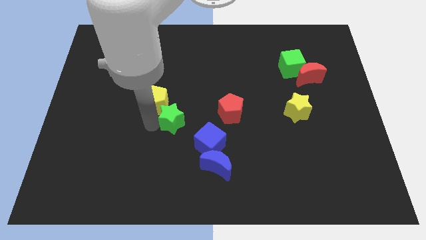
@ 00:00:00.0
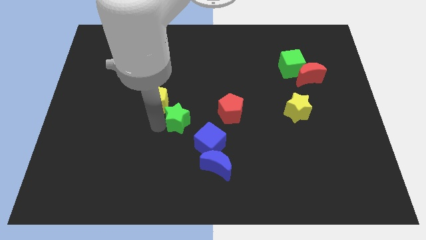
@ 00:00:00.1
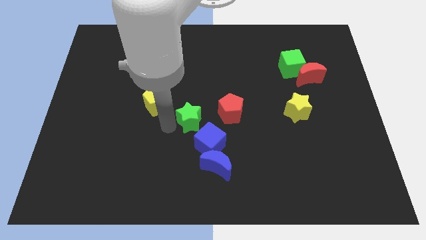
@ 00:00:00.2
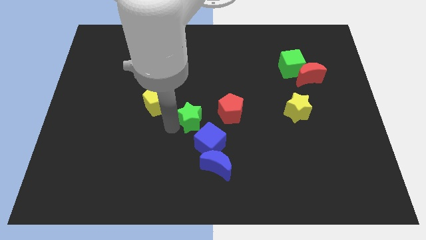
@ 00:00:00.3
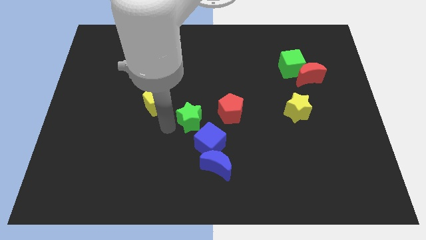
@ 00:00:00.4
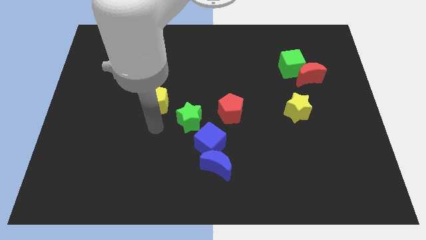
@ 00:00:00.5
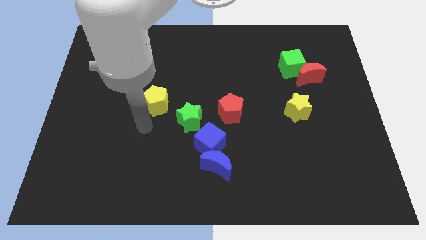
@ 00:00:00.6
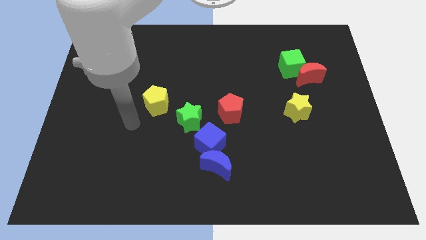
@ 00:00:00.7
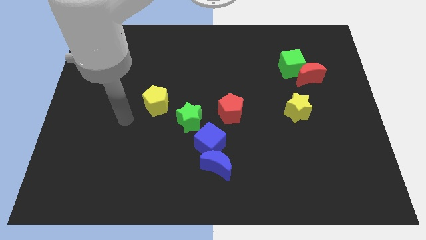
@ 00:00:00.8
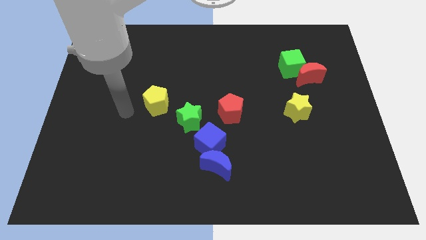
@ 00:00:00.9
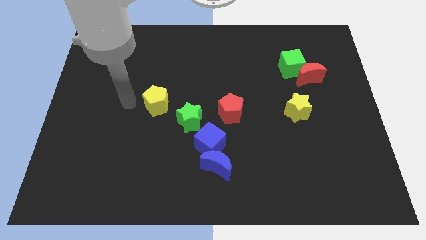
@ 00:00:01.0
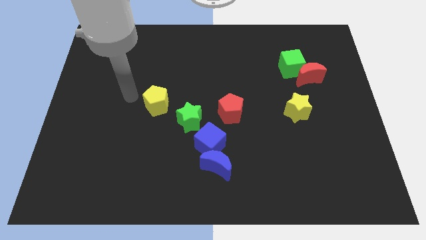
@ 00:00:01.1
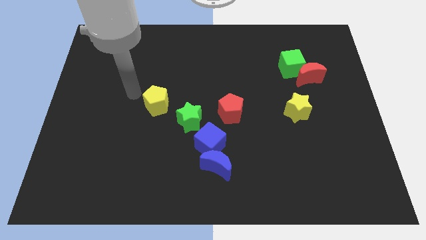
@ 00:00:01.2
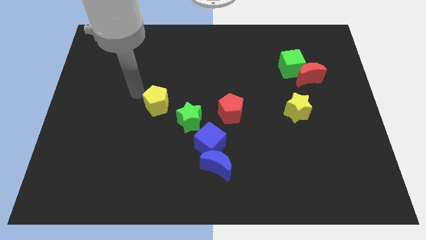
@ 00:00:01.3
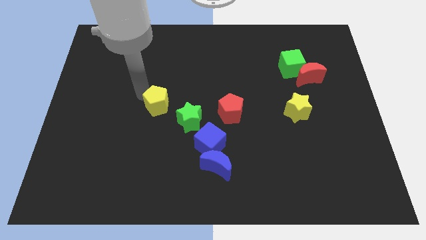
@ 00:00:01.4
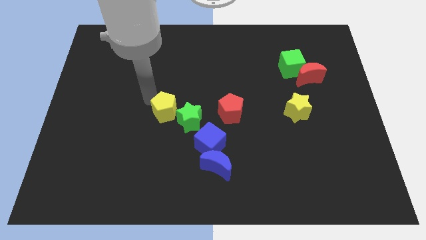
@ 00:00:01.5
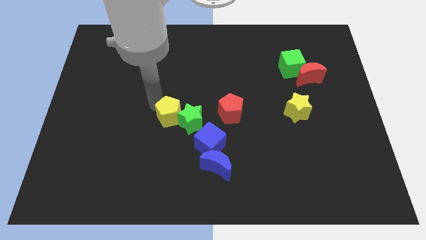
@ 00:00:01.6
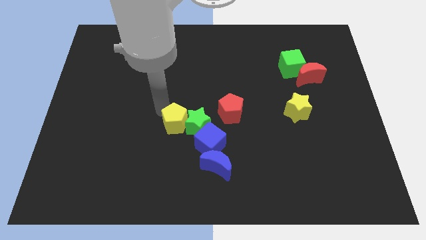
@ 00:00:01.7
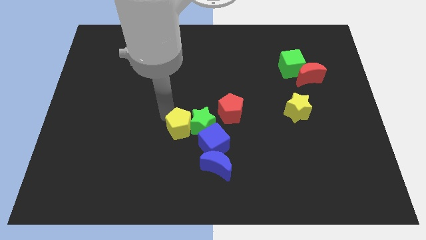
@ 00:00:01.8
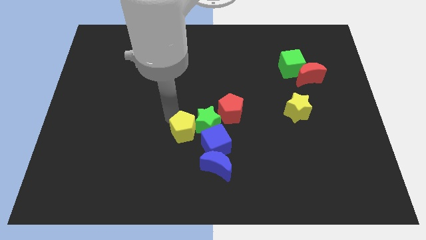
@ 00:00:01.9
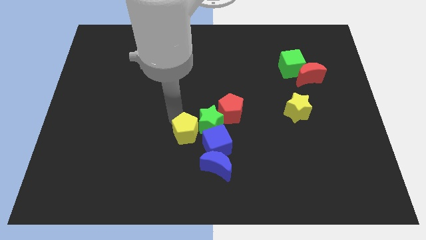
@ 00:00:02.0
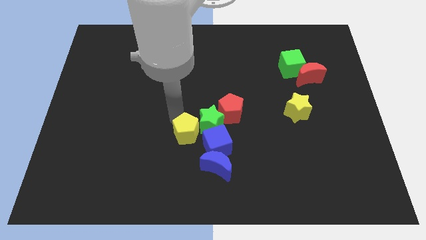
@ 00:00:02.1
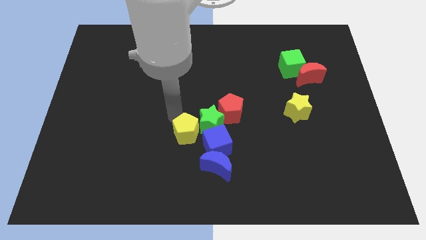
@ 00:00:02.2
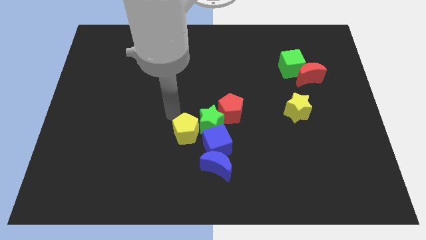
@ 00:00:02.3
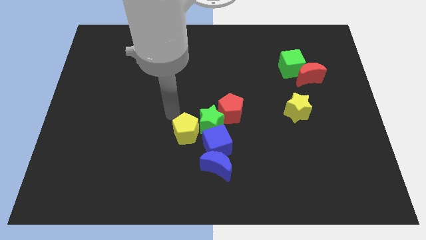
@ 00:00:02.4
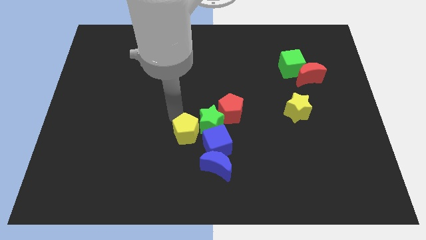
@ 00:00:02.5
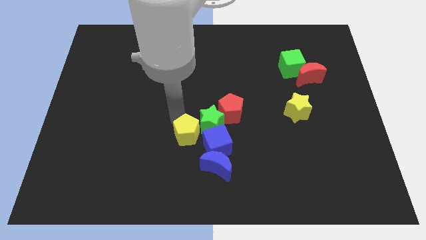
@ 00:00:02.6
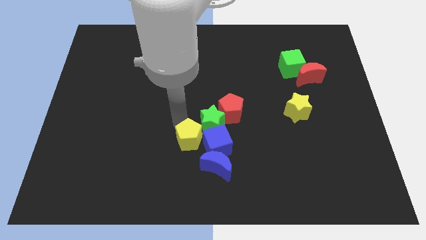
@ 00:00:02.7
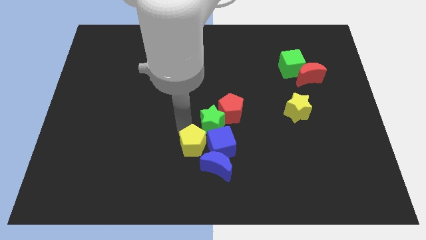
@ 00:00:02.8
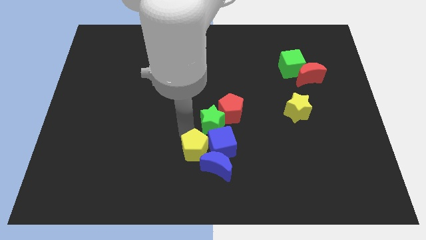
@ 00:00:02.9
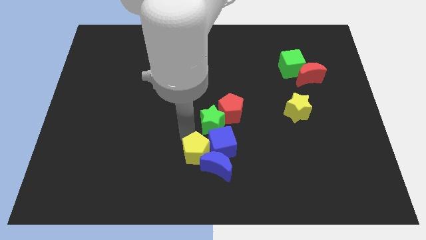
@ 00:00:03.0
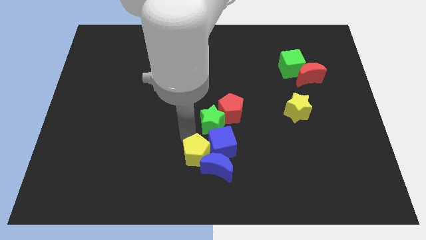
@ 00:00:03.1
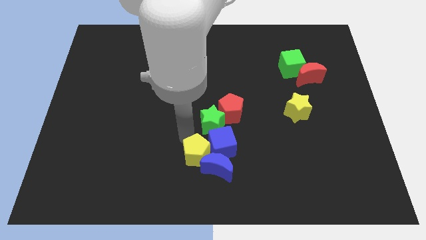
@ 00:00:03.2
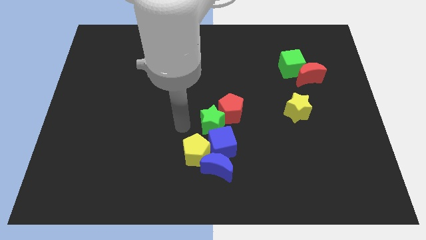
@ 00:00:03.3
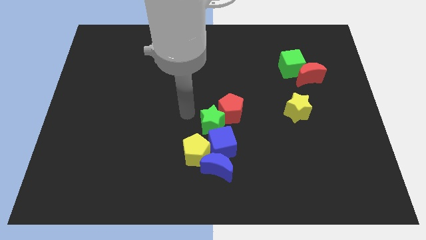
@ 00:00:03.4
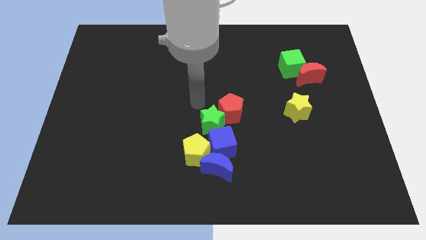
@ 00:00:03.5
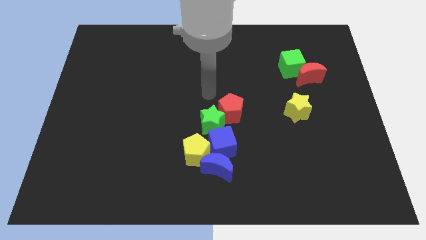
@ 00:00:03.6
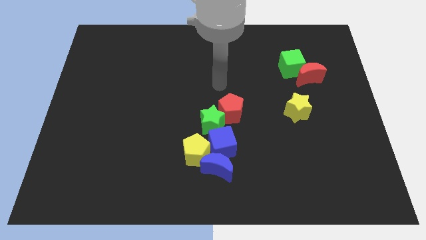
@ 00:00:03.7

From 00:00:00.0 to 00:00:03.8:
push the yellow pentagon into the blue moon

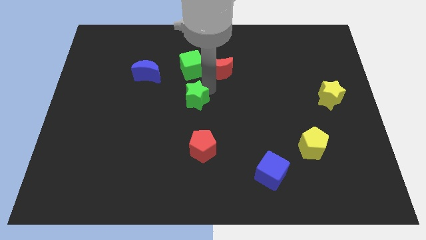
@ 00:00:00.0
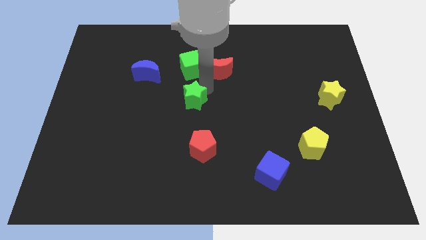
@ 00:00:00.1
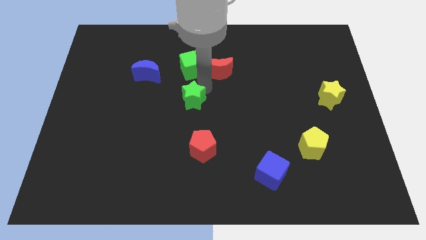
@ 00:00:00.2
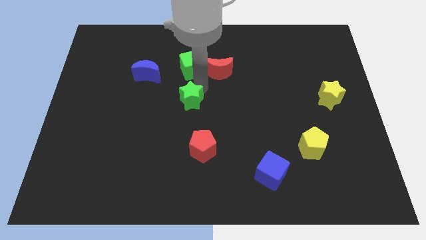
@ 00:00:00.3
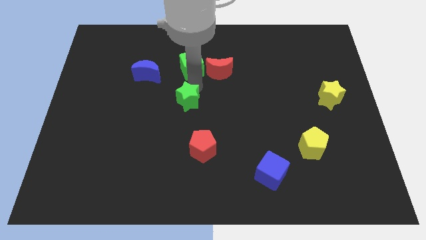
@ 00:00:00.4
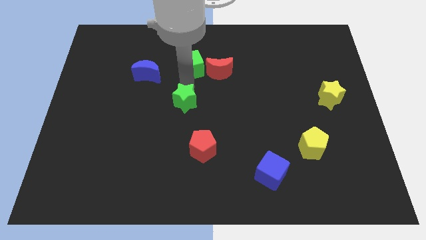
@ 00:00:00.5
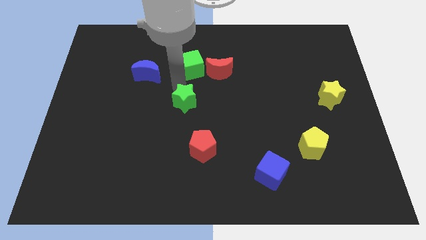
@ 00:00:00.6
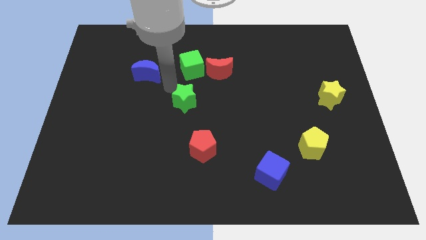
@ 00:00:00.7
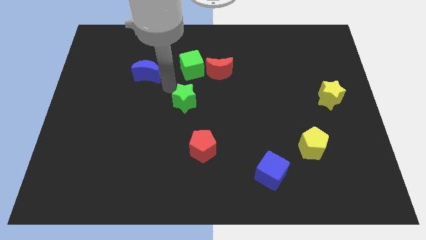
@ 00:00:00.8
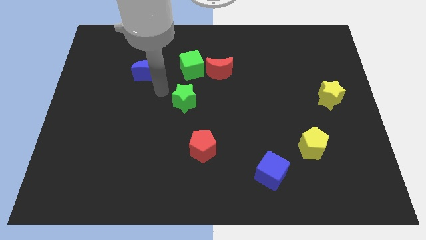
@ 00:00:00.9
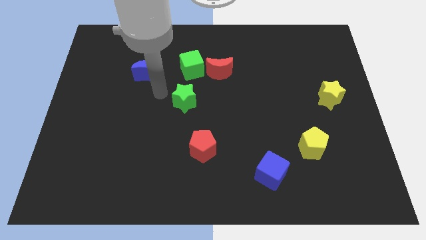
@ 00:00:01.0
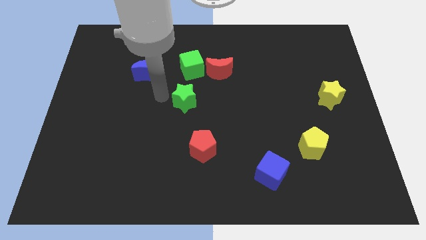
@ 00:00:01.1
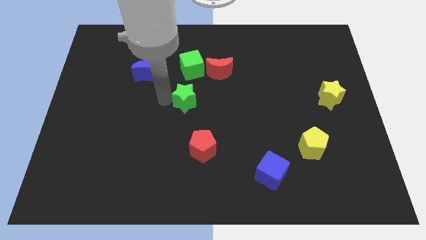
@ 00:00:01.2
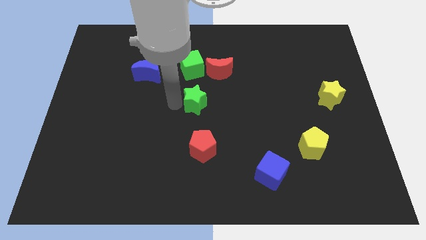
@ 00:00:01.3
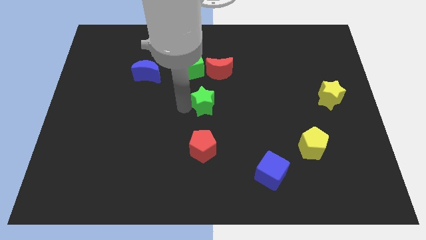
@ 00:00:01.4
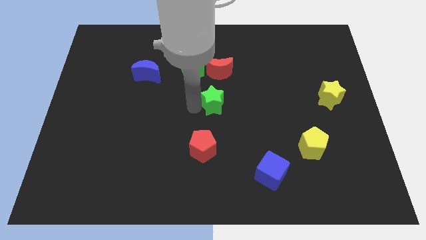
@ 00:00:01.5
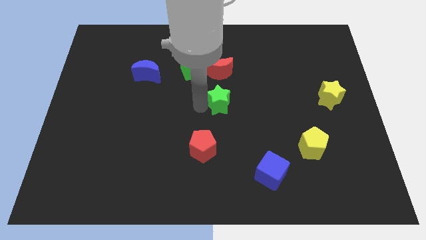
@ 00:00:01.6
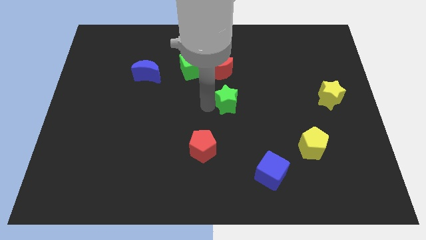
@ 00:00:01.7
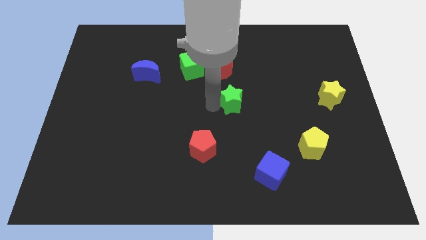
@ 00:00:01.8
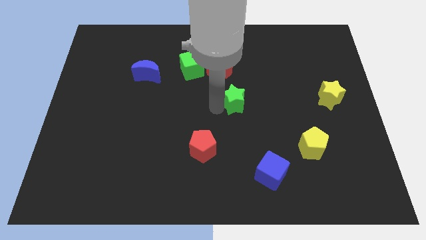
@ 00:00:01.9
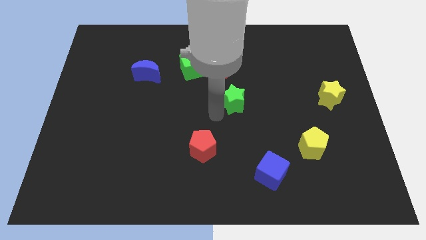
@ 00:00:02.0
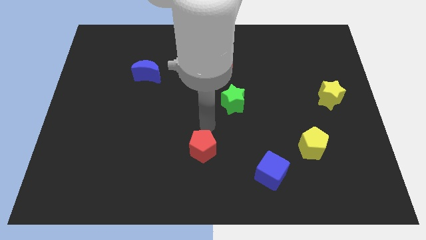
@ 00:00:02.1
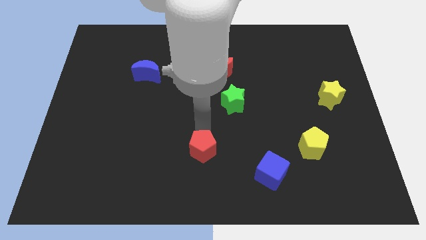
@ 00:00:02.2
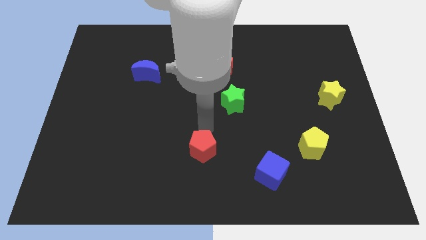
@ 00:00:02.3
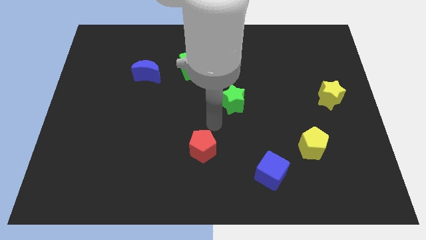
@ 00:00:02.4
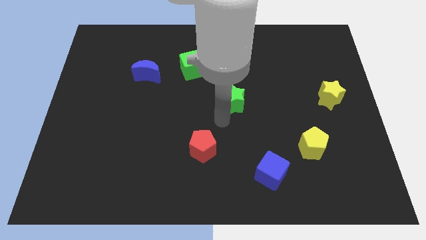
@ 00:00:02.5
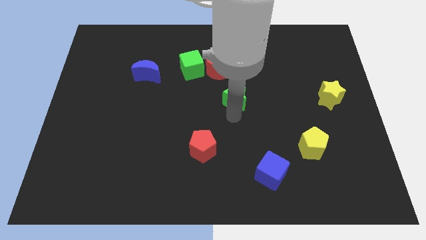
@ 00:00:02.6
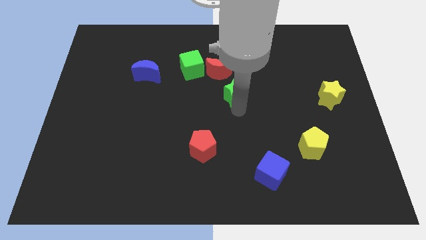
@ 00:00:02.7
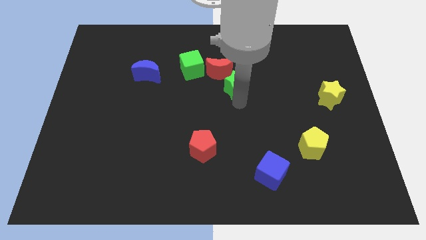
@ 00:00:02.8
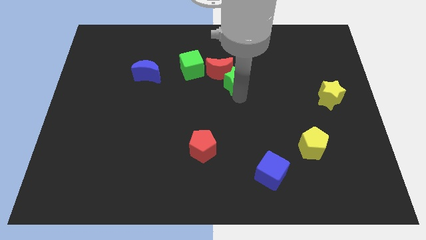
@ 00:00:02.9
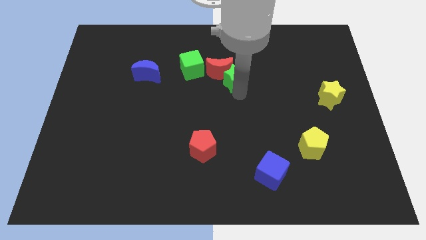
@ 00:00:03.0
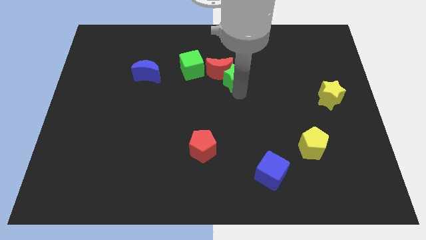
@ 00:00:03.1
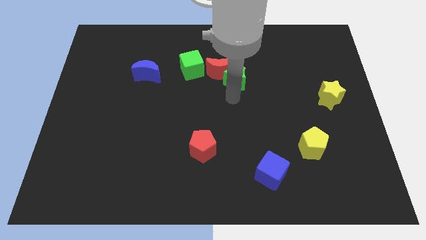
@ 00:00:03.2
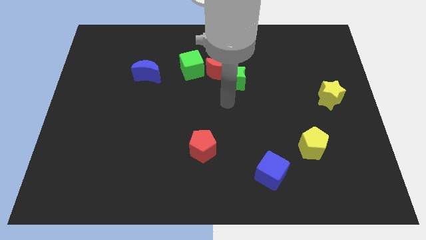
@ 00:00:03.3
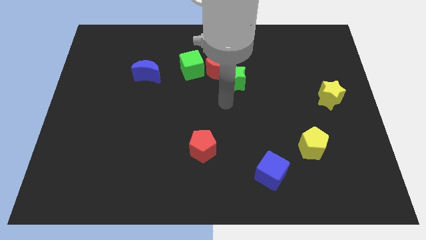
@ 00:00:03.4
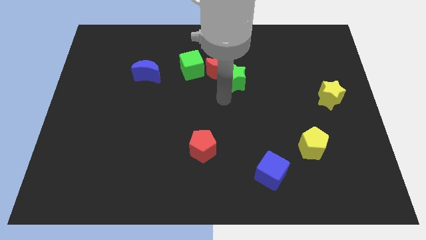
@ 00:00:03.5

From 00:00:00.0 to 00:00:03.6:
slide the green star into the red moon

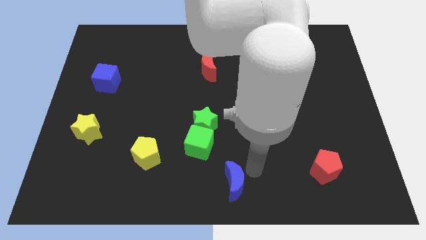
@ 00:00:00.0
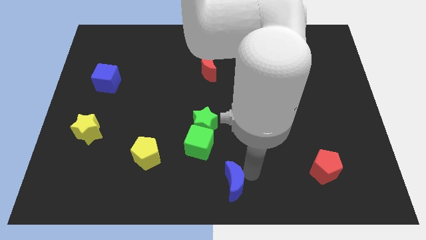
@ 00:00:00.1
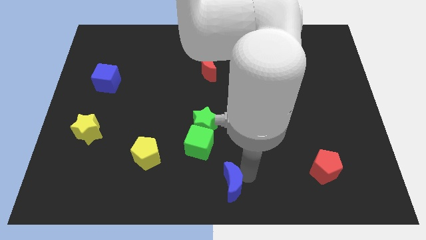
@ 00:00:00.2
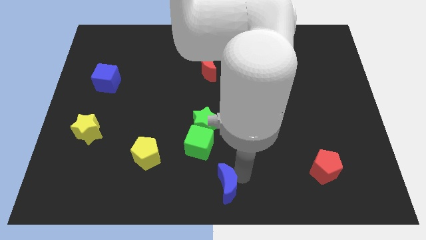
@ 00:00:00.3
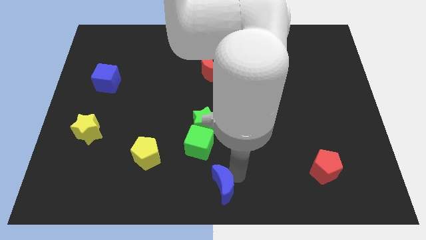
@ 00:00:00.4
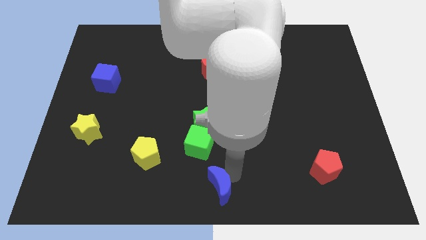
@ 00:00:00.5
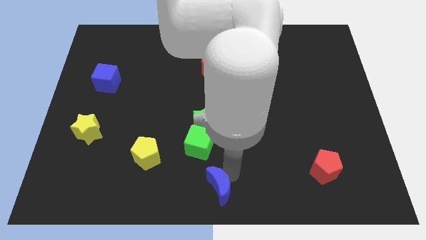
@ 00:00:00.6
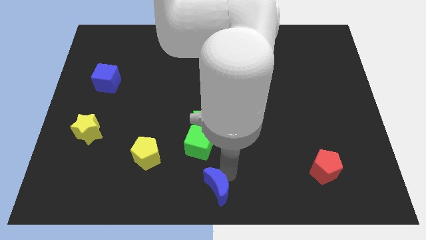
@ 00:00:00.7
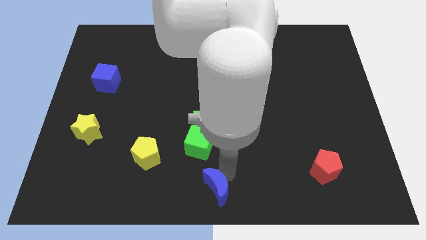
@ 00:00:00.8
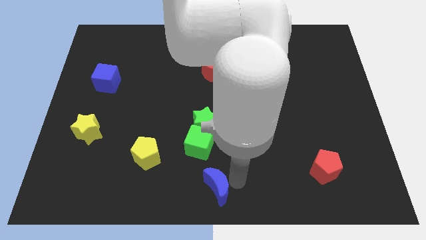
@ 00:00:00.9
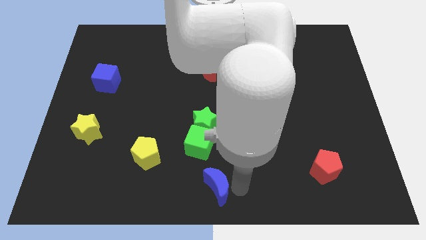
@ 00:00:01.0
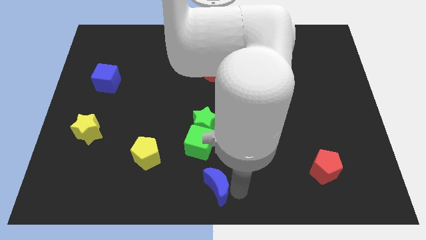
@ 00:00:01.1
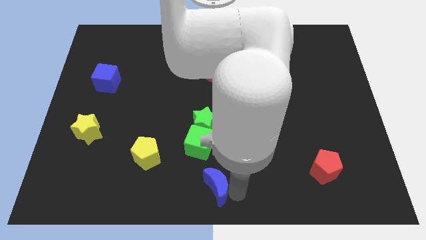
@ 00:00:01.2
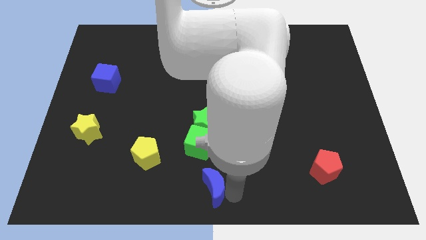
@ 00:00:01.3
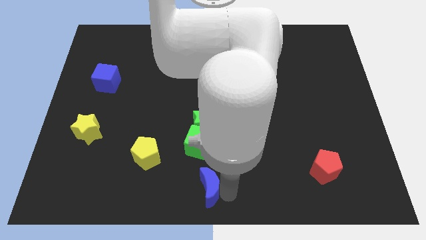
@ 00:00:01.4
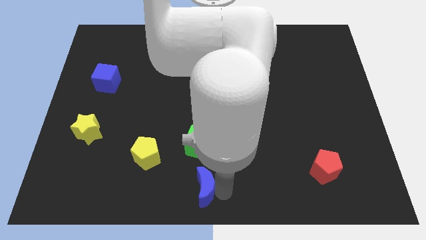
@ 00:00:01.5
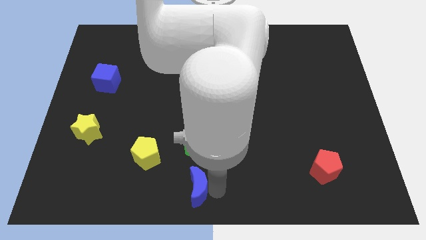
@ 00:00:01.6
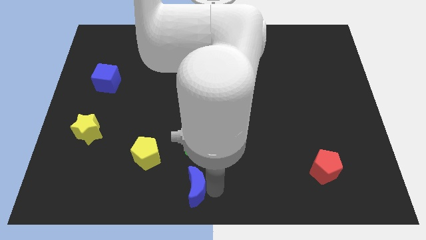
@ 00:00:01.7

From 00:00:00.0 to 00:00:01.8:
place blue moon to the bottom of green cube
